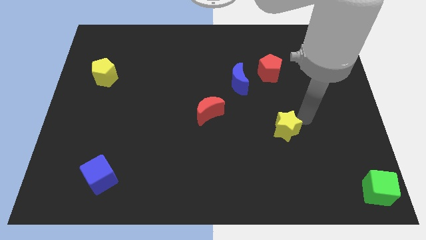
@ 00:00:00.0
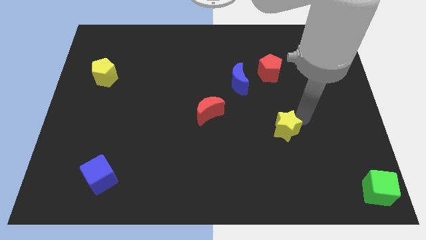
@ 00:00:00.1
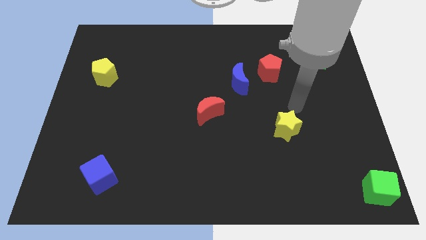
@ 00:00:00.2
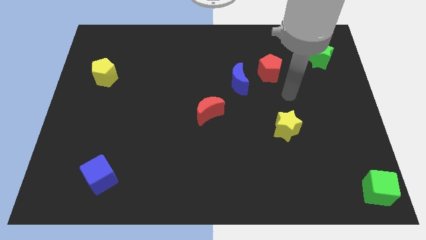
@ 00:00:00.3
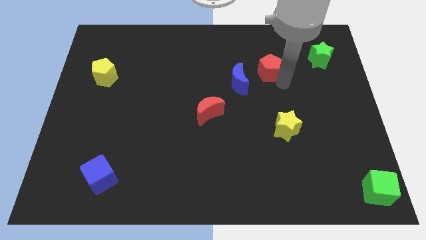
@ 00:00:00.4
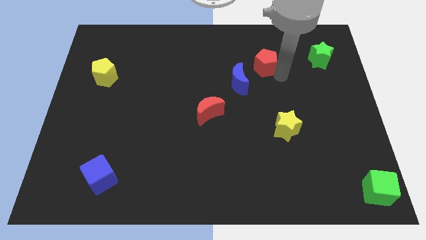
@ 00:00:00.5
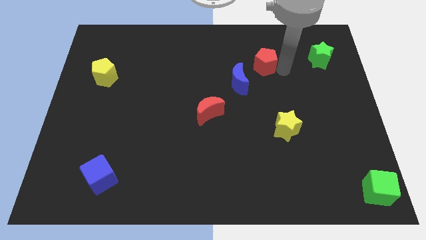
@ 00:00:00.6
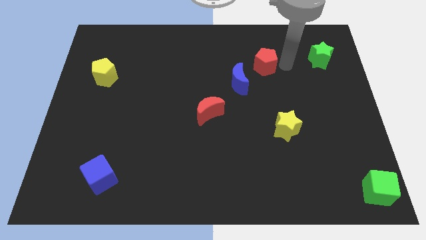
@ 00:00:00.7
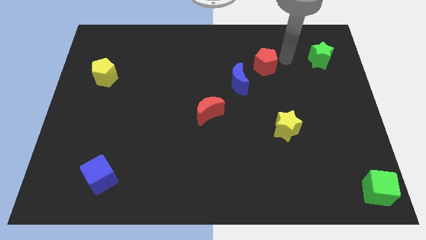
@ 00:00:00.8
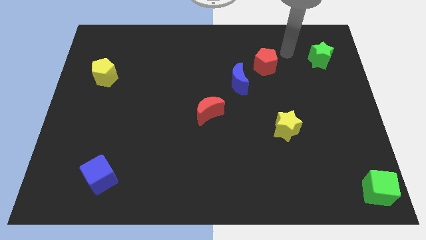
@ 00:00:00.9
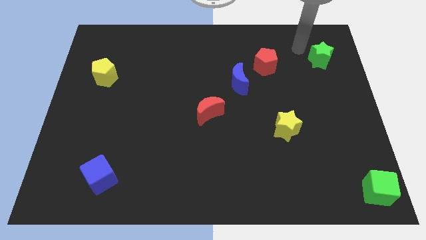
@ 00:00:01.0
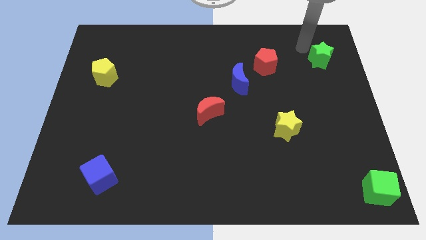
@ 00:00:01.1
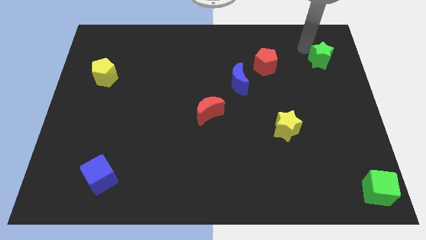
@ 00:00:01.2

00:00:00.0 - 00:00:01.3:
move the red pentagon to top of the board slightly

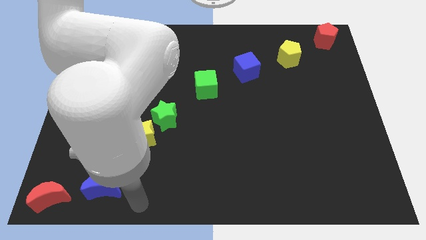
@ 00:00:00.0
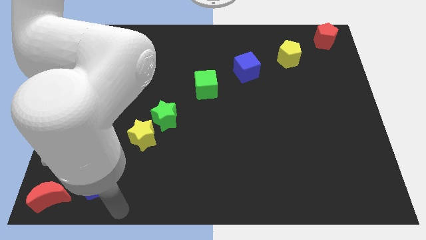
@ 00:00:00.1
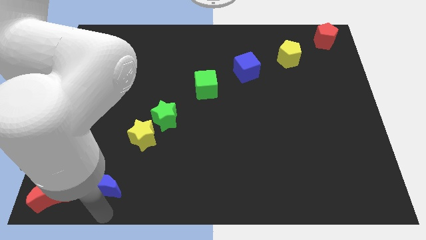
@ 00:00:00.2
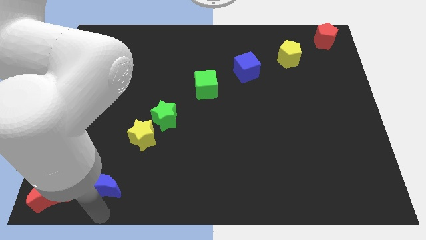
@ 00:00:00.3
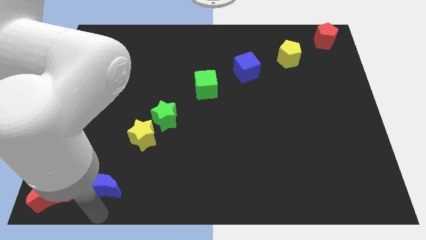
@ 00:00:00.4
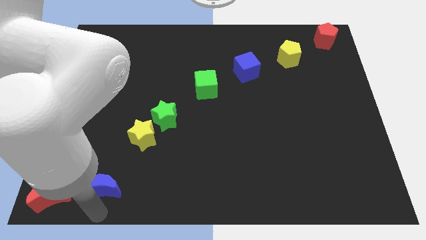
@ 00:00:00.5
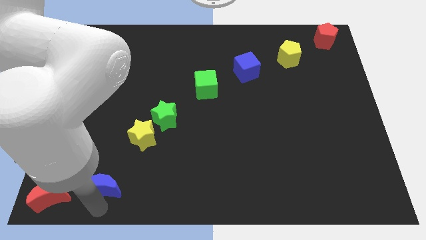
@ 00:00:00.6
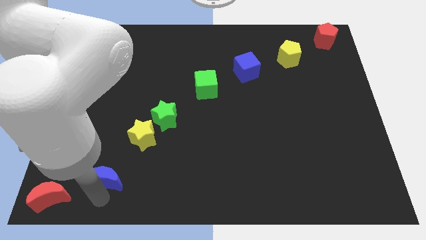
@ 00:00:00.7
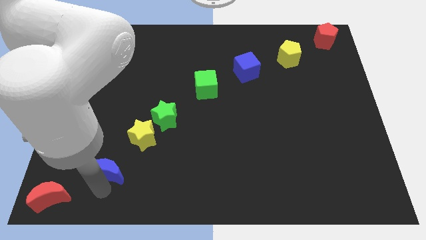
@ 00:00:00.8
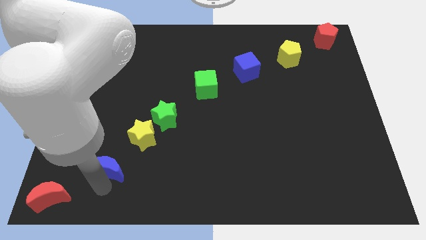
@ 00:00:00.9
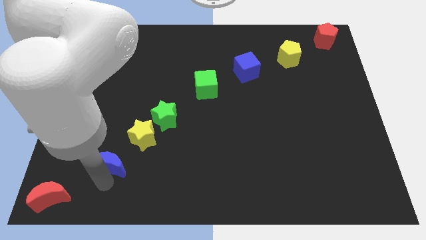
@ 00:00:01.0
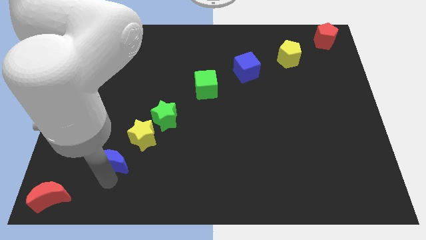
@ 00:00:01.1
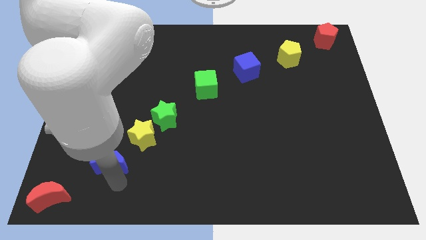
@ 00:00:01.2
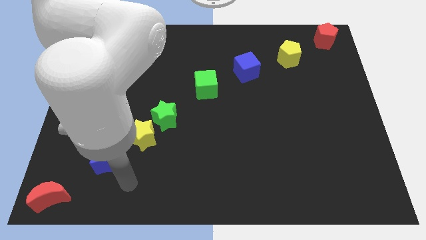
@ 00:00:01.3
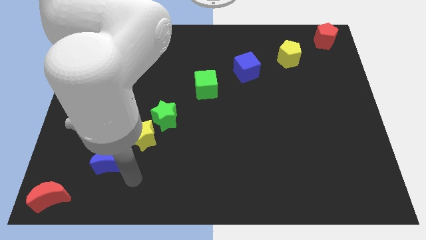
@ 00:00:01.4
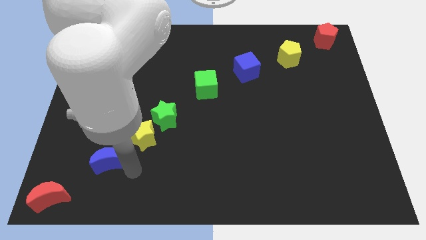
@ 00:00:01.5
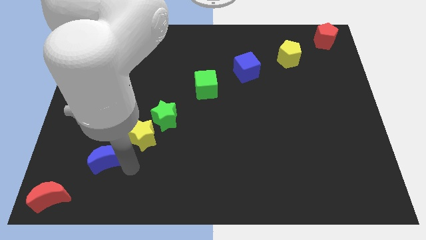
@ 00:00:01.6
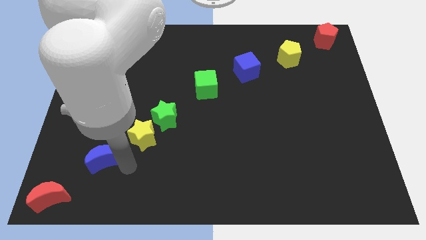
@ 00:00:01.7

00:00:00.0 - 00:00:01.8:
place blue crescent between yellow star and red crescent

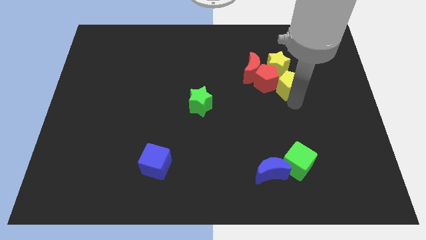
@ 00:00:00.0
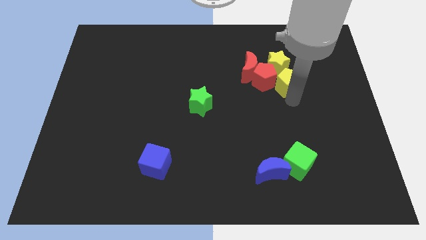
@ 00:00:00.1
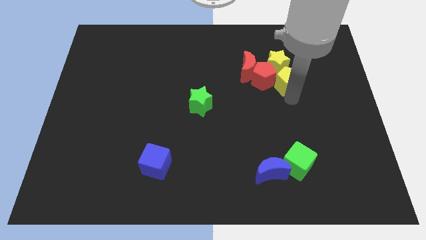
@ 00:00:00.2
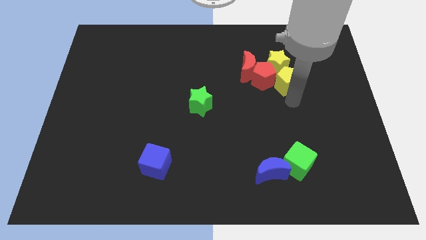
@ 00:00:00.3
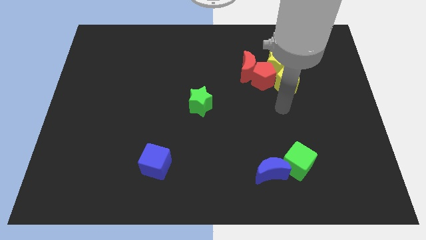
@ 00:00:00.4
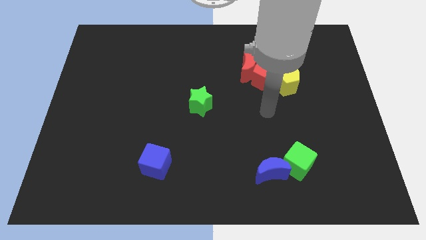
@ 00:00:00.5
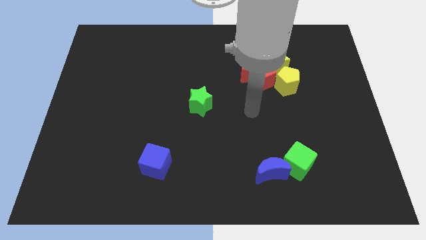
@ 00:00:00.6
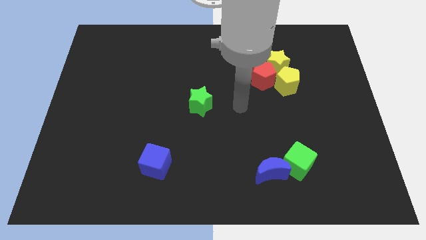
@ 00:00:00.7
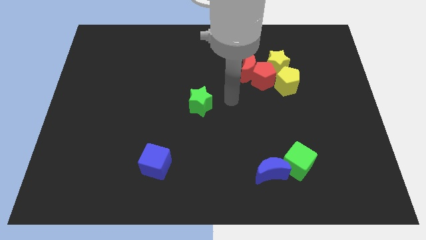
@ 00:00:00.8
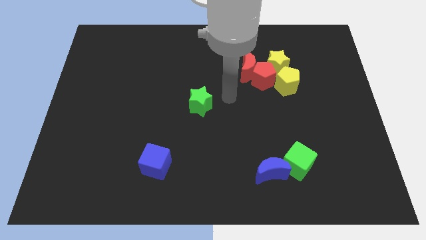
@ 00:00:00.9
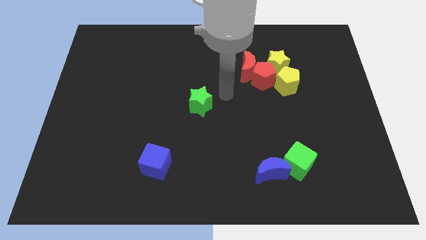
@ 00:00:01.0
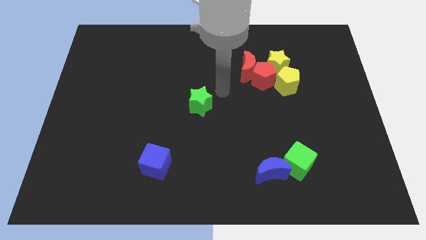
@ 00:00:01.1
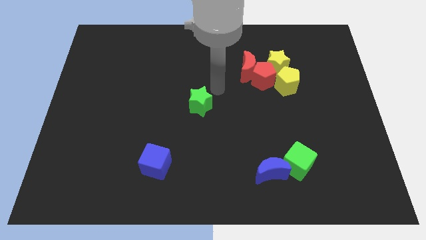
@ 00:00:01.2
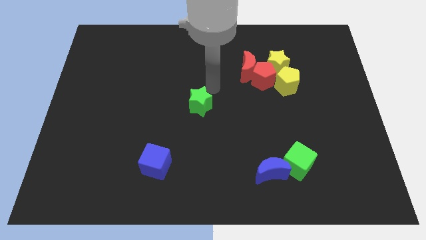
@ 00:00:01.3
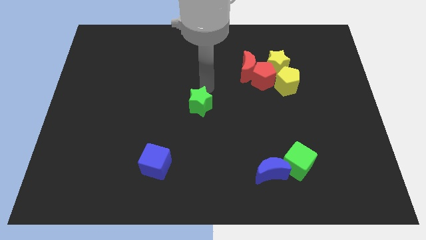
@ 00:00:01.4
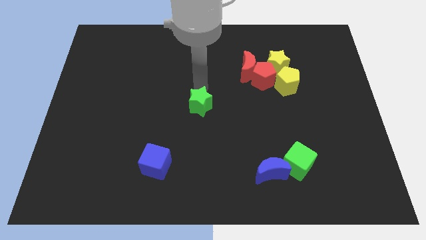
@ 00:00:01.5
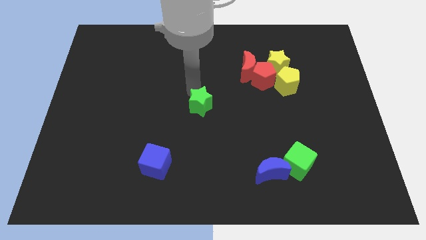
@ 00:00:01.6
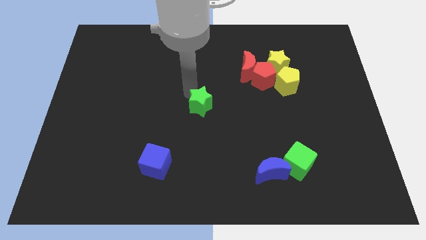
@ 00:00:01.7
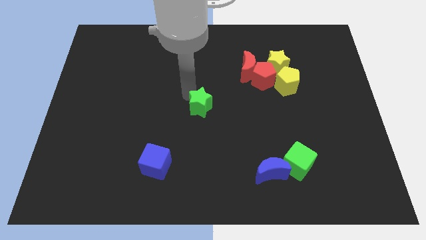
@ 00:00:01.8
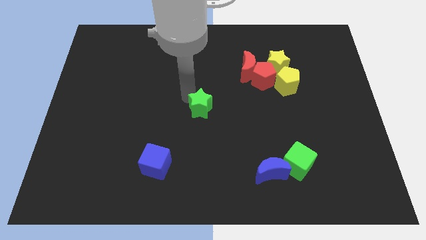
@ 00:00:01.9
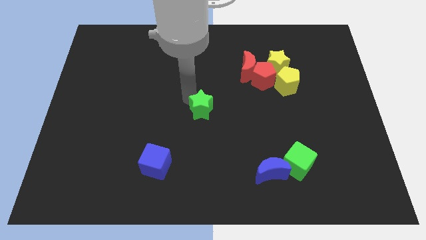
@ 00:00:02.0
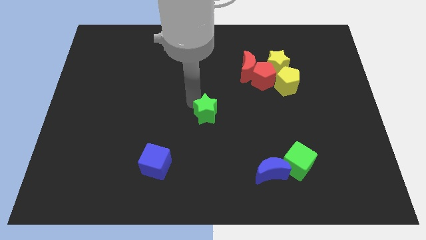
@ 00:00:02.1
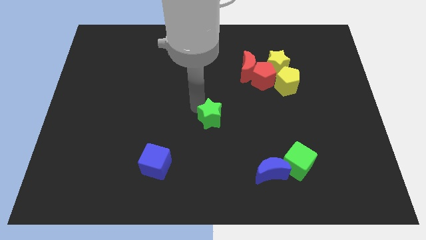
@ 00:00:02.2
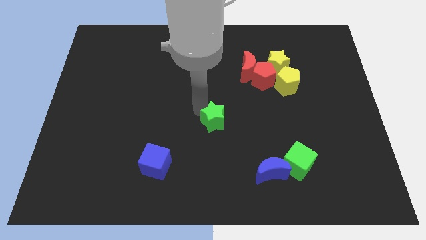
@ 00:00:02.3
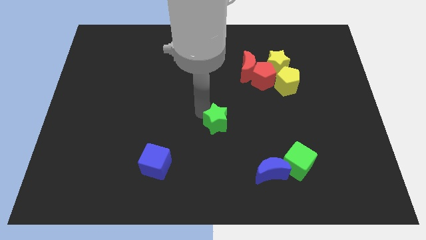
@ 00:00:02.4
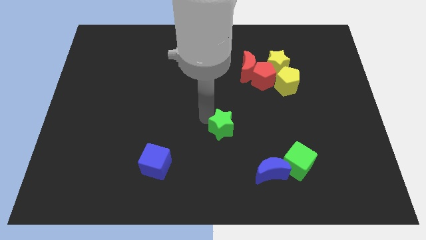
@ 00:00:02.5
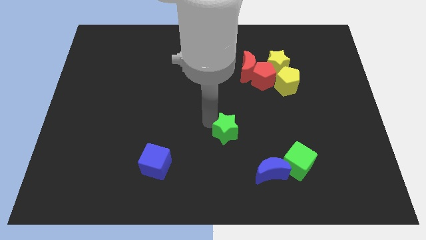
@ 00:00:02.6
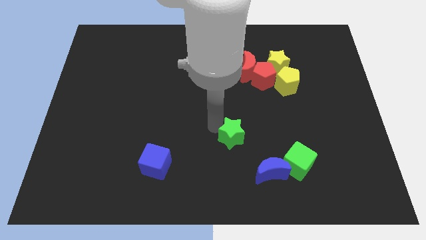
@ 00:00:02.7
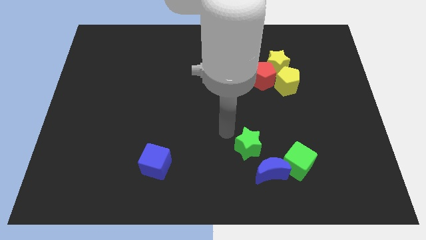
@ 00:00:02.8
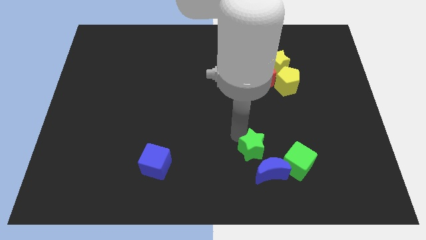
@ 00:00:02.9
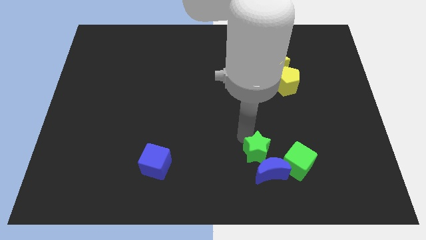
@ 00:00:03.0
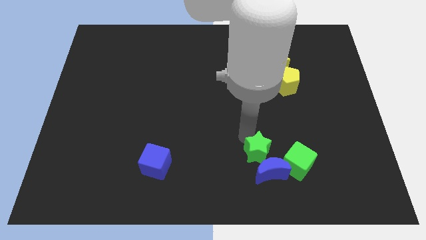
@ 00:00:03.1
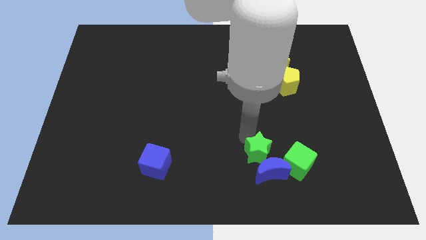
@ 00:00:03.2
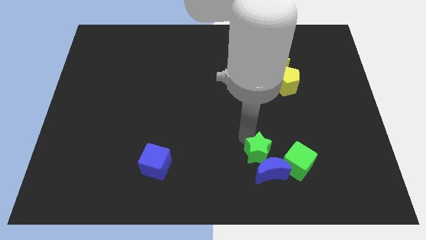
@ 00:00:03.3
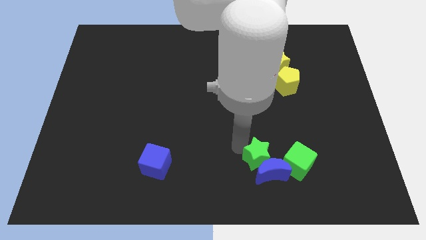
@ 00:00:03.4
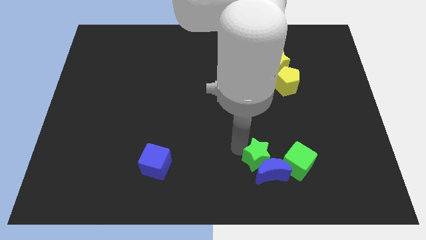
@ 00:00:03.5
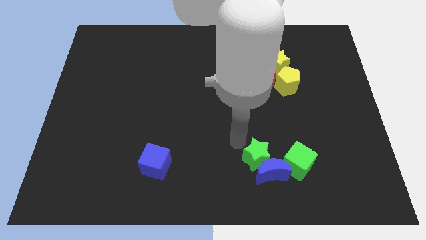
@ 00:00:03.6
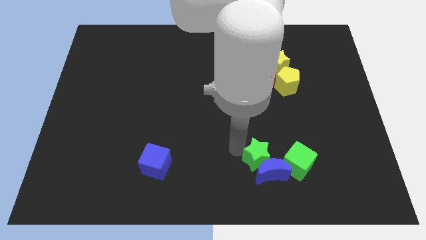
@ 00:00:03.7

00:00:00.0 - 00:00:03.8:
move the green star into the blue moon

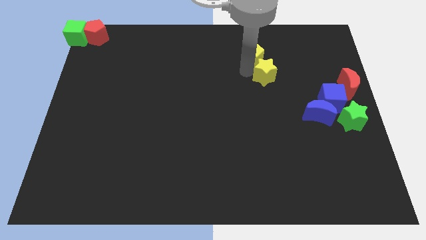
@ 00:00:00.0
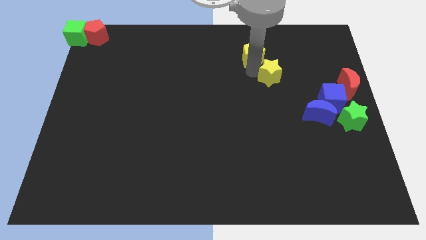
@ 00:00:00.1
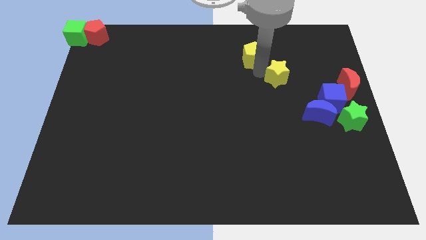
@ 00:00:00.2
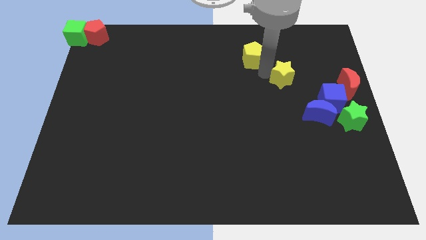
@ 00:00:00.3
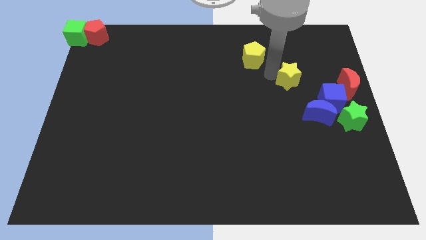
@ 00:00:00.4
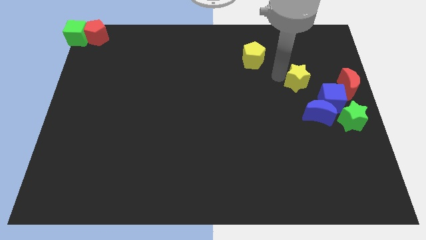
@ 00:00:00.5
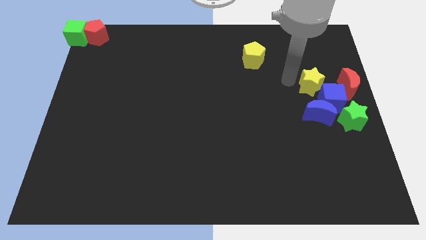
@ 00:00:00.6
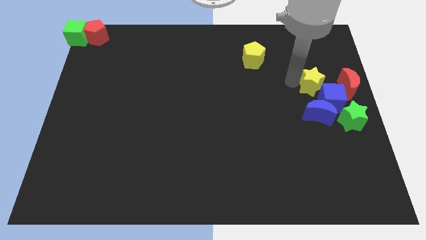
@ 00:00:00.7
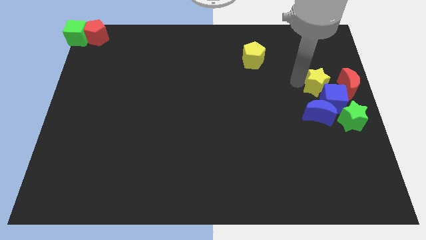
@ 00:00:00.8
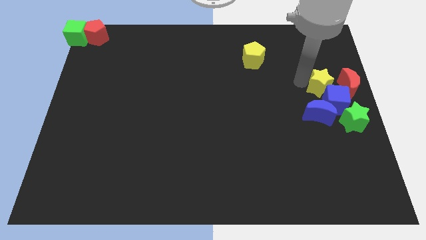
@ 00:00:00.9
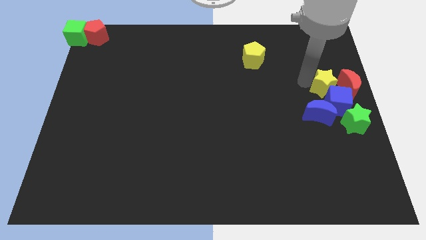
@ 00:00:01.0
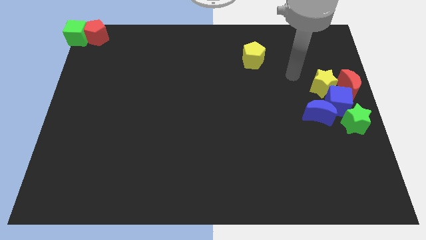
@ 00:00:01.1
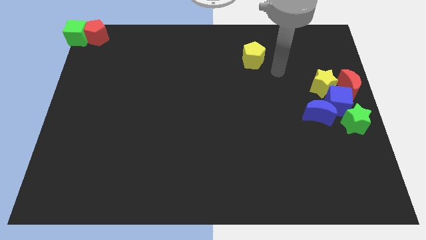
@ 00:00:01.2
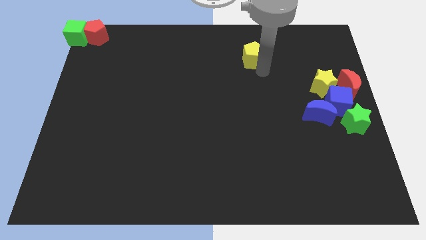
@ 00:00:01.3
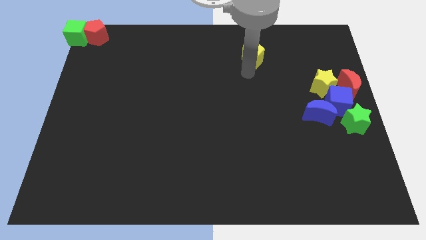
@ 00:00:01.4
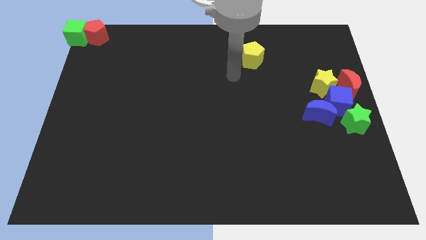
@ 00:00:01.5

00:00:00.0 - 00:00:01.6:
move yellow star into the blue cube

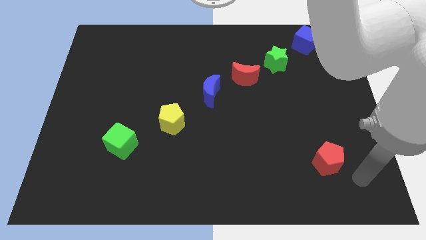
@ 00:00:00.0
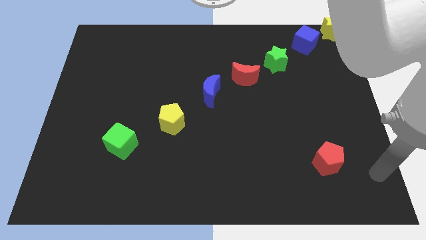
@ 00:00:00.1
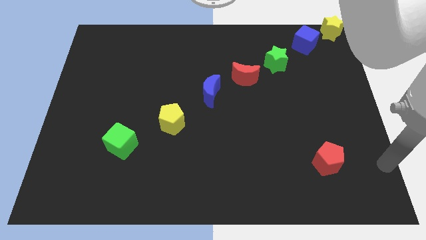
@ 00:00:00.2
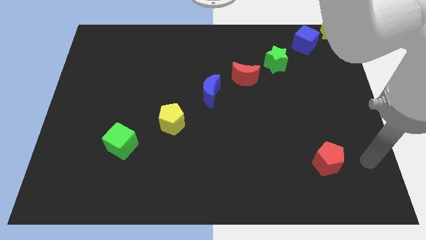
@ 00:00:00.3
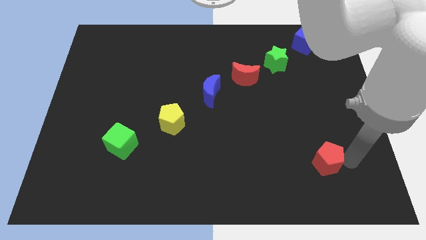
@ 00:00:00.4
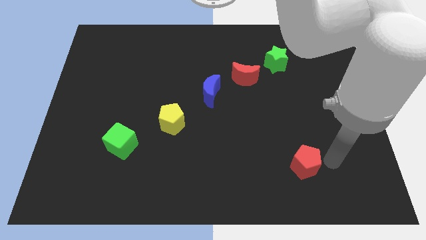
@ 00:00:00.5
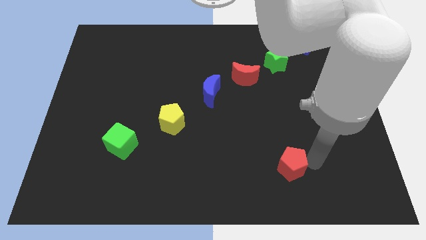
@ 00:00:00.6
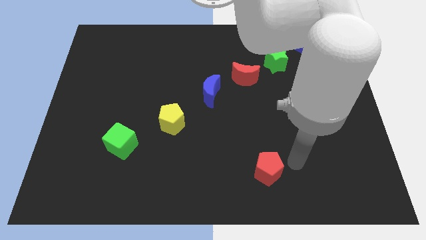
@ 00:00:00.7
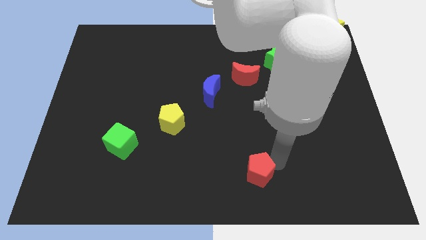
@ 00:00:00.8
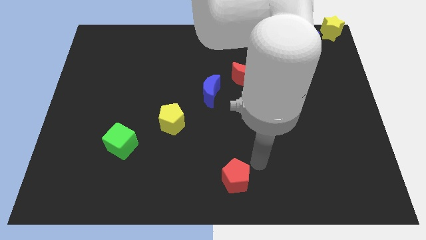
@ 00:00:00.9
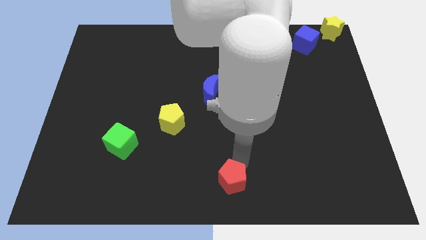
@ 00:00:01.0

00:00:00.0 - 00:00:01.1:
slide the red pentagon towards the bottom center of the board
